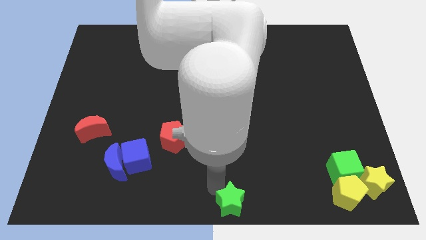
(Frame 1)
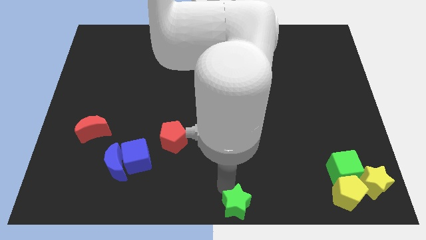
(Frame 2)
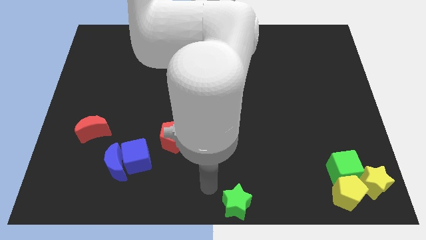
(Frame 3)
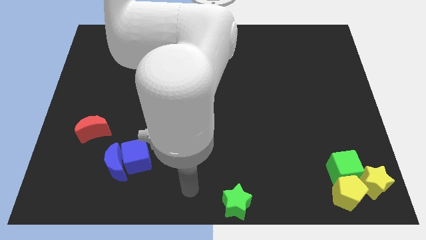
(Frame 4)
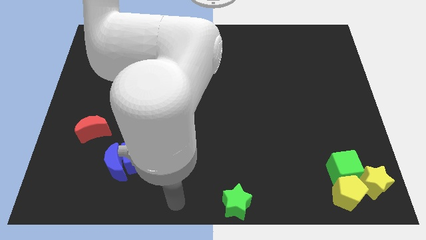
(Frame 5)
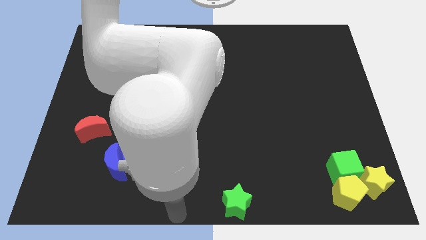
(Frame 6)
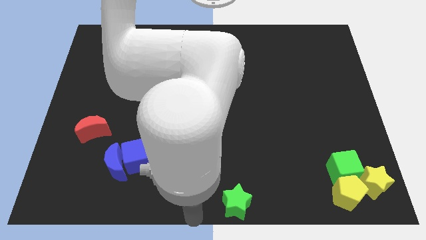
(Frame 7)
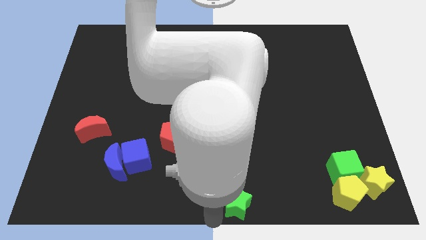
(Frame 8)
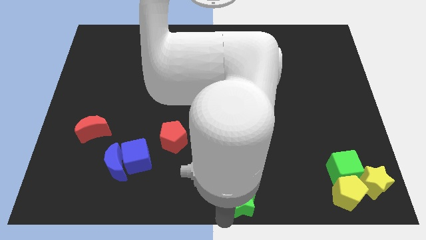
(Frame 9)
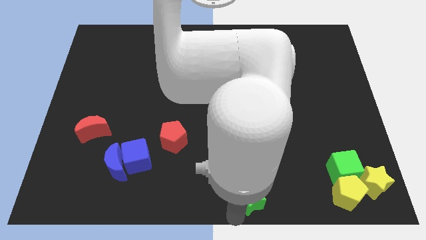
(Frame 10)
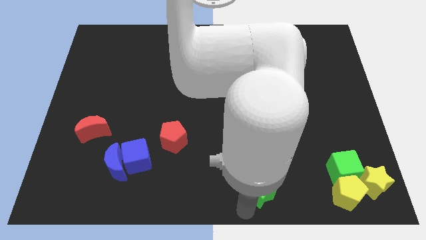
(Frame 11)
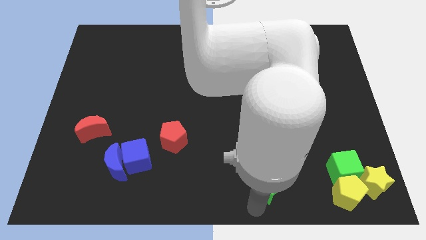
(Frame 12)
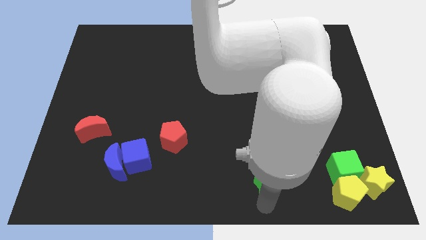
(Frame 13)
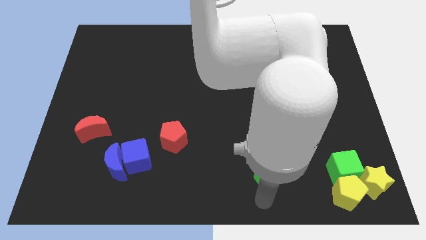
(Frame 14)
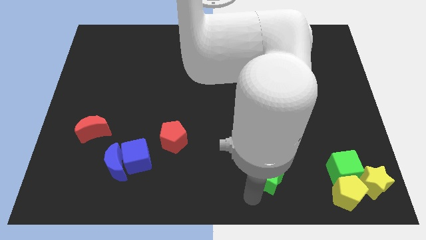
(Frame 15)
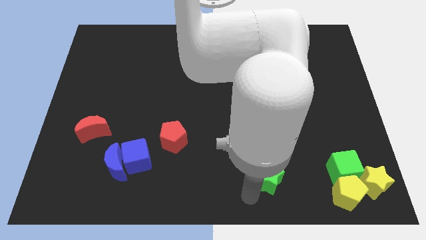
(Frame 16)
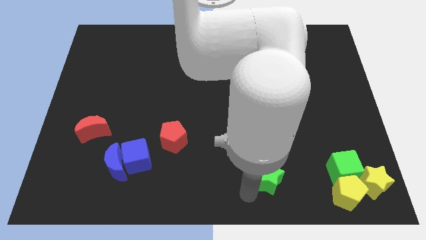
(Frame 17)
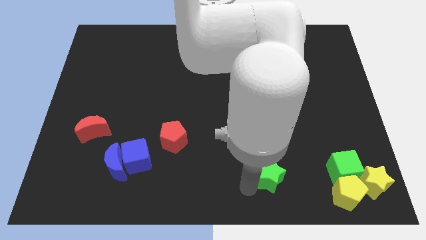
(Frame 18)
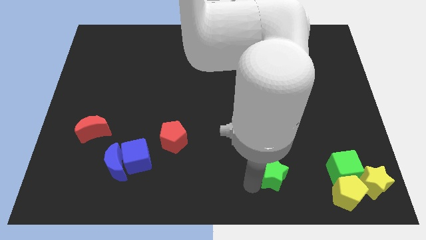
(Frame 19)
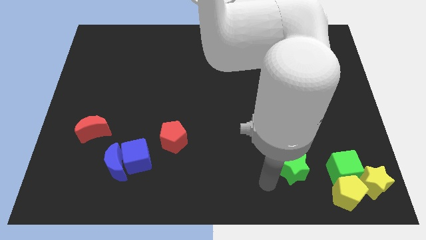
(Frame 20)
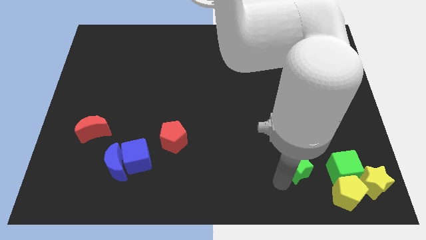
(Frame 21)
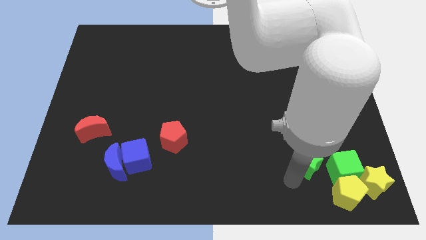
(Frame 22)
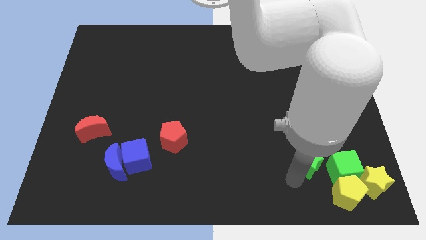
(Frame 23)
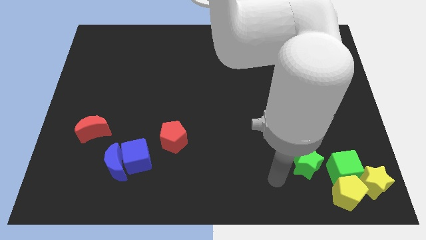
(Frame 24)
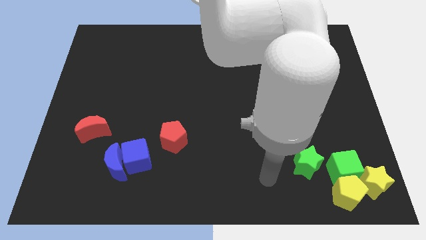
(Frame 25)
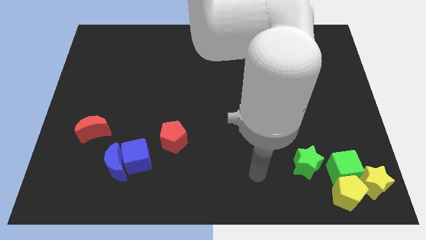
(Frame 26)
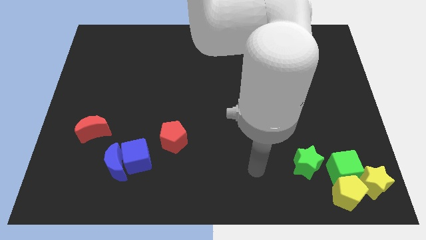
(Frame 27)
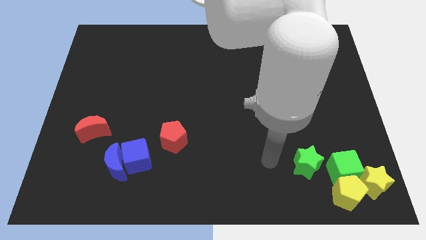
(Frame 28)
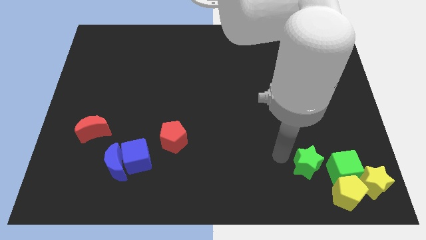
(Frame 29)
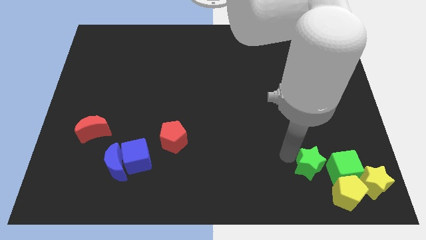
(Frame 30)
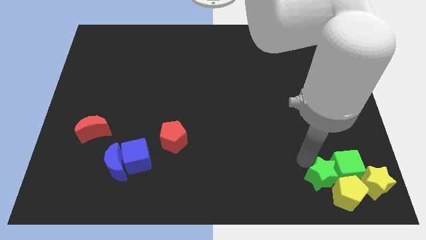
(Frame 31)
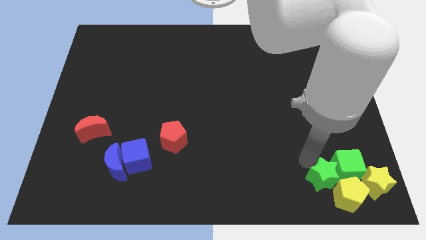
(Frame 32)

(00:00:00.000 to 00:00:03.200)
place green star beside green cube

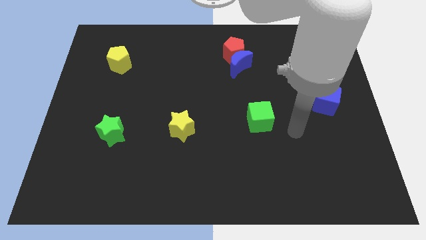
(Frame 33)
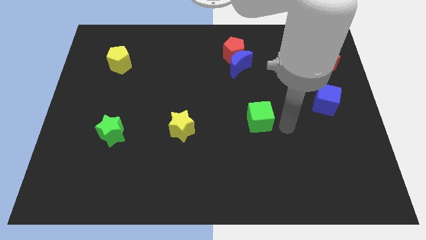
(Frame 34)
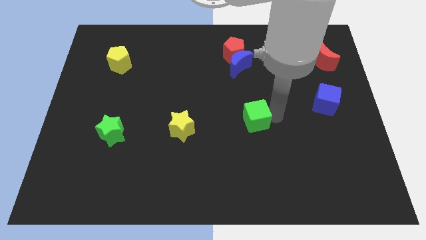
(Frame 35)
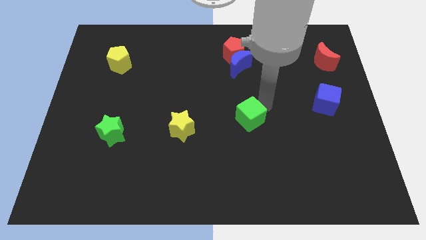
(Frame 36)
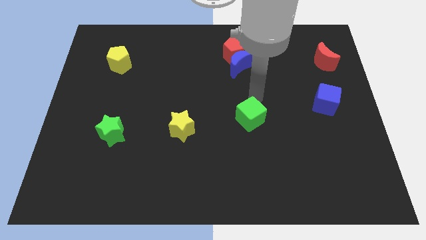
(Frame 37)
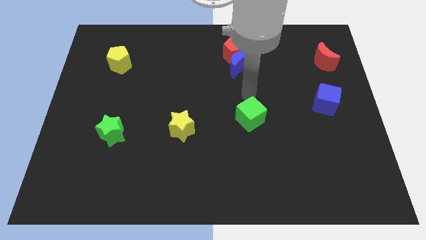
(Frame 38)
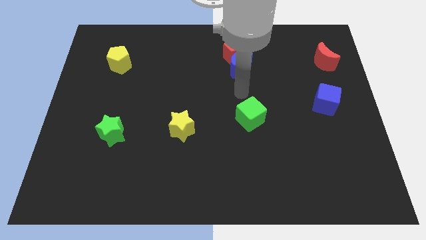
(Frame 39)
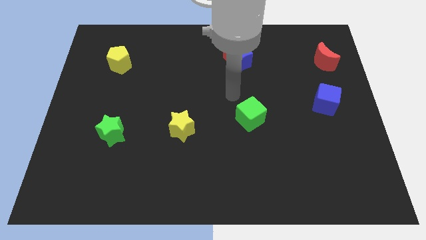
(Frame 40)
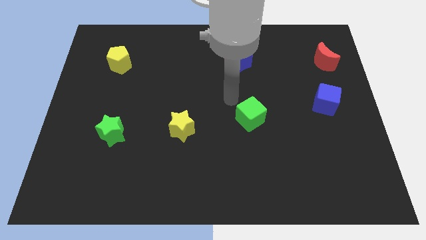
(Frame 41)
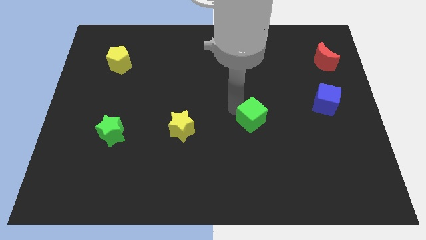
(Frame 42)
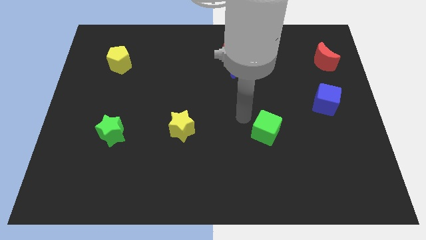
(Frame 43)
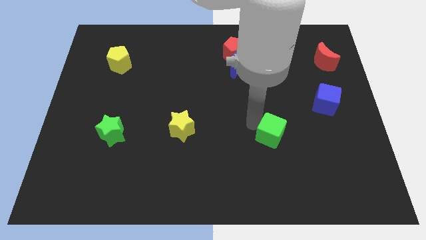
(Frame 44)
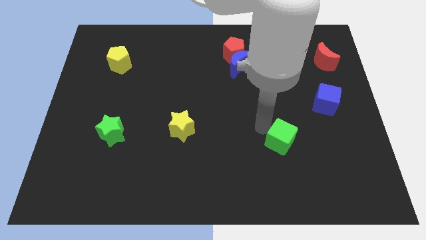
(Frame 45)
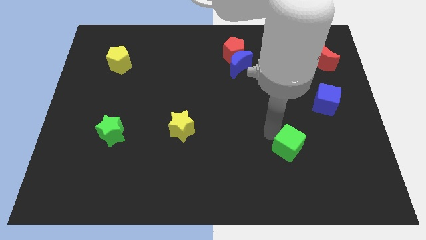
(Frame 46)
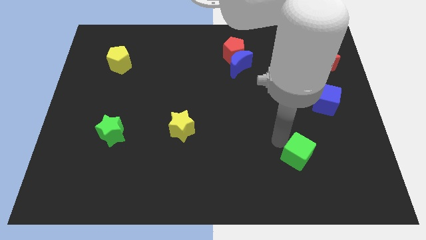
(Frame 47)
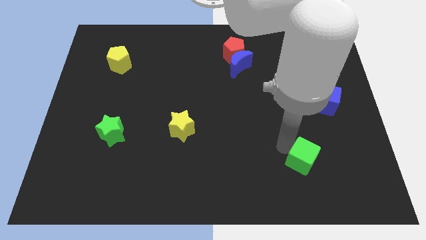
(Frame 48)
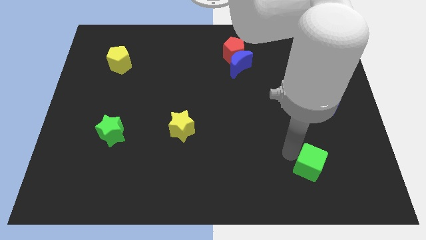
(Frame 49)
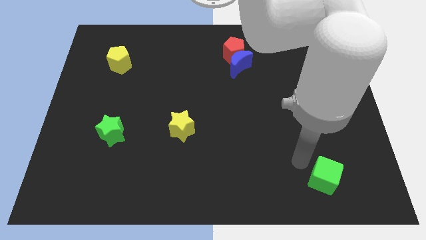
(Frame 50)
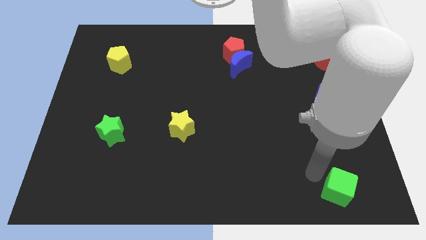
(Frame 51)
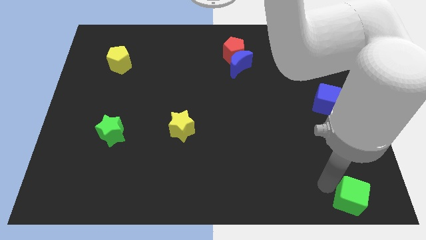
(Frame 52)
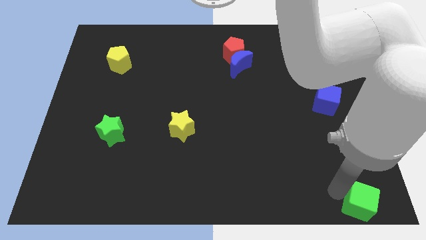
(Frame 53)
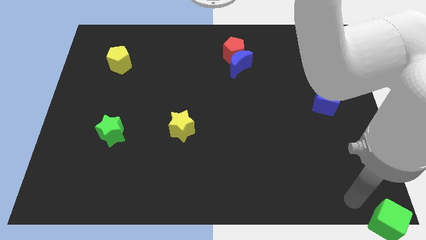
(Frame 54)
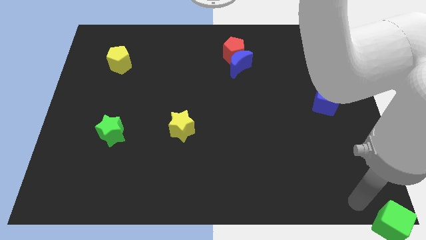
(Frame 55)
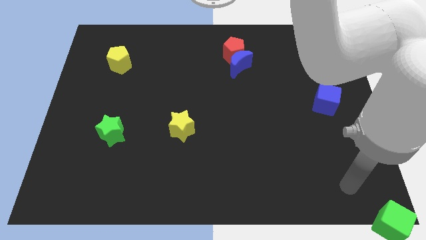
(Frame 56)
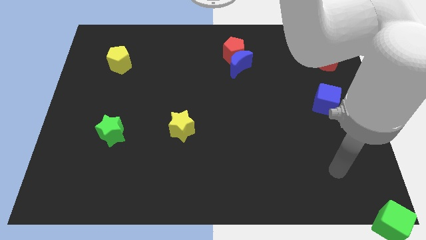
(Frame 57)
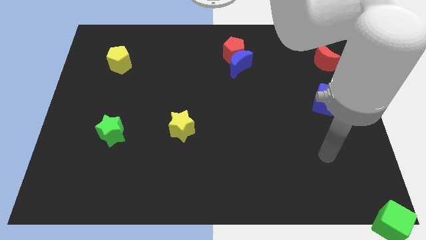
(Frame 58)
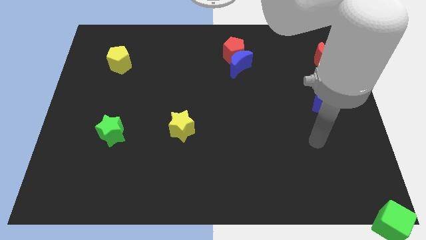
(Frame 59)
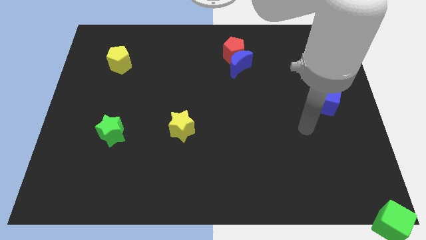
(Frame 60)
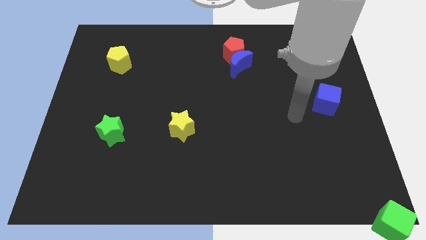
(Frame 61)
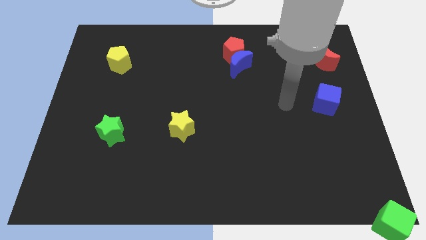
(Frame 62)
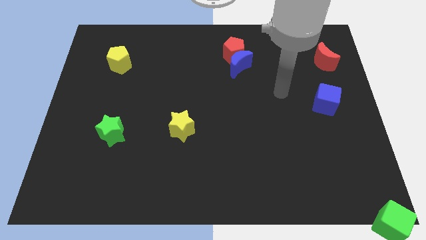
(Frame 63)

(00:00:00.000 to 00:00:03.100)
push the green cube to the bottom right corner

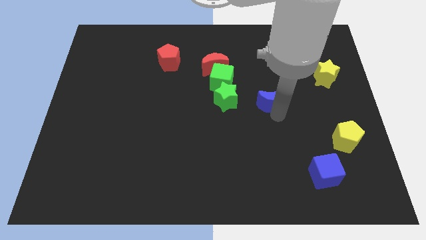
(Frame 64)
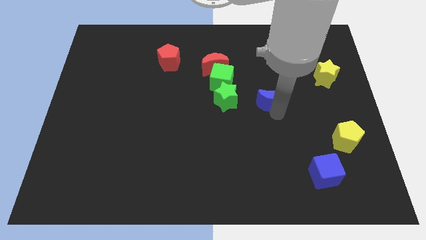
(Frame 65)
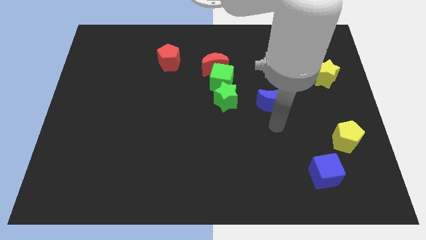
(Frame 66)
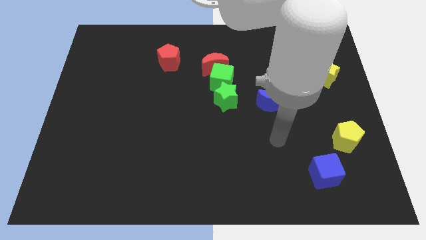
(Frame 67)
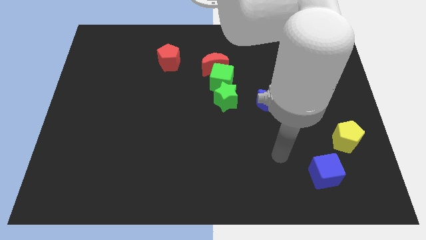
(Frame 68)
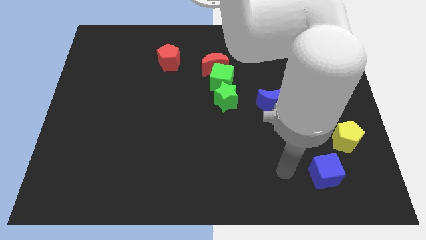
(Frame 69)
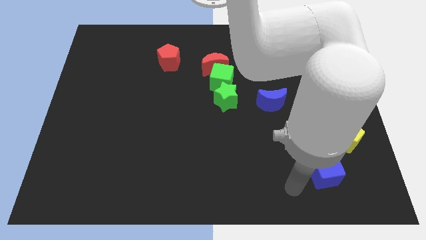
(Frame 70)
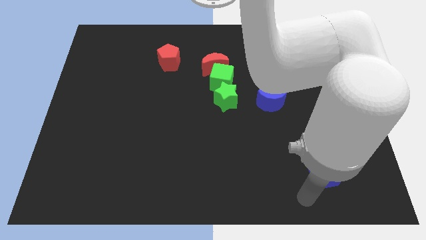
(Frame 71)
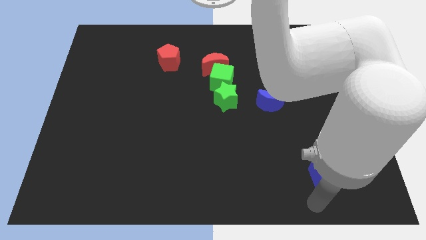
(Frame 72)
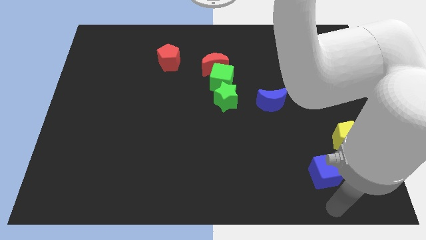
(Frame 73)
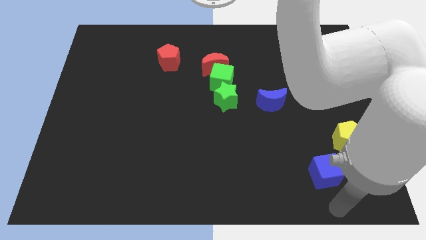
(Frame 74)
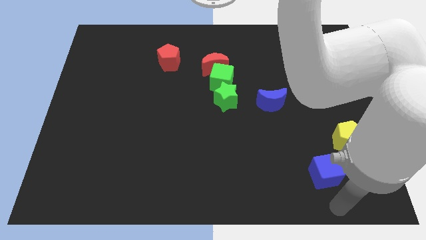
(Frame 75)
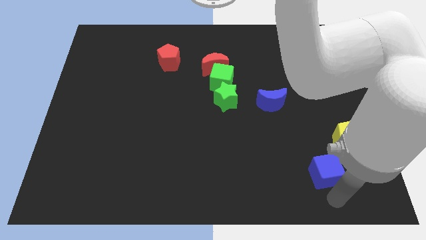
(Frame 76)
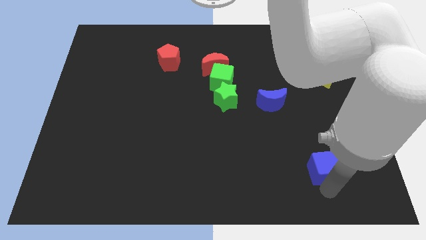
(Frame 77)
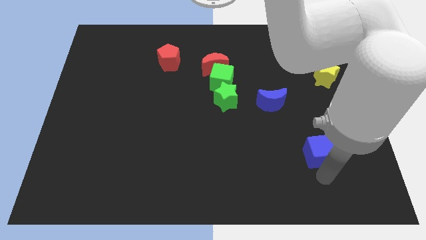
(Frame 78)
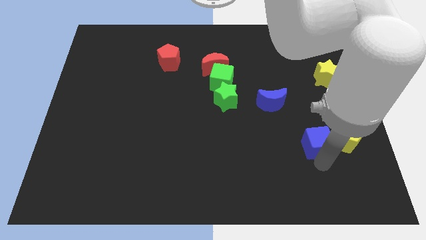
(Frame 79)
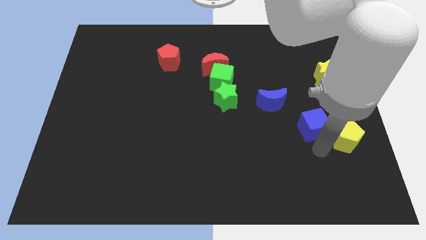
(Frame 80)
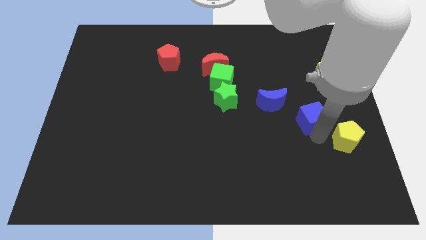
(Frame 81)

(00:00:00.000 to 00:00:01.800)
move the blue cube between yellow pentagon and blue moon

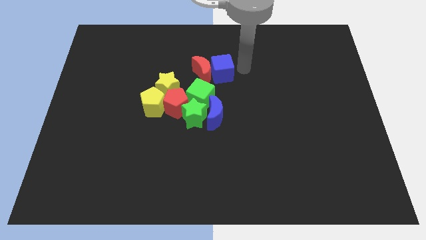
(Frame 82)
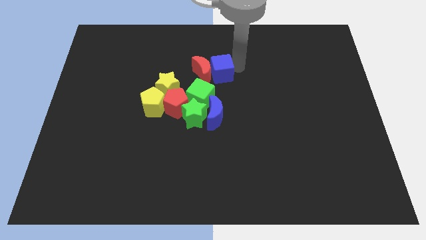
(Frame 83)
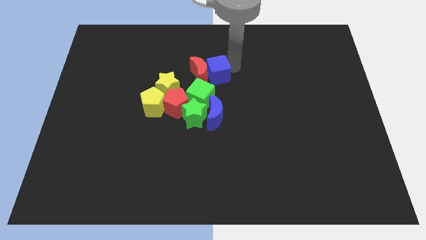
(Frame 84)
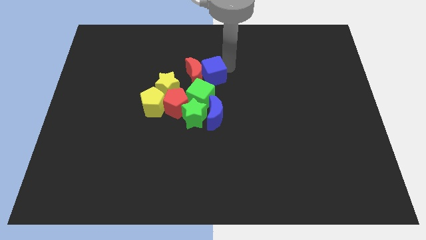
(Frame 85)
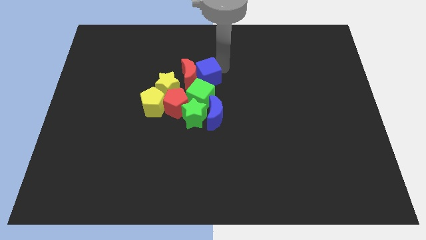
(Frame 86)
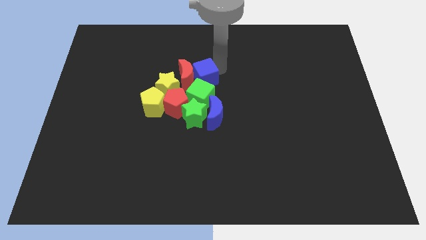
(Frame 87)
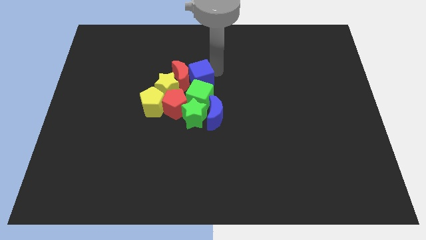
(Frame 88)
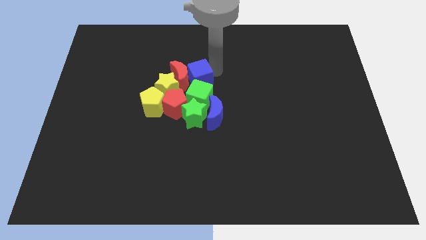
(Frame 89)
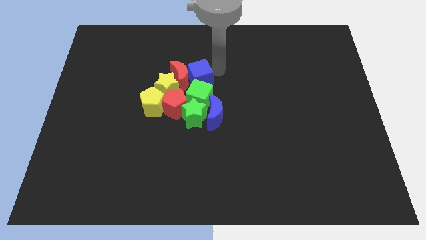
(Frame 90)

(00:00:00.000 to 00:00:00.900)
move the red crescent with blue cube into the group of blocks
